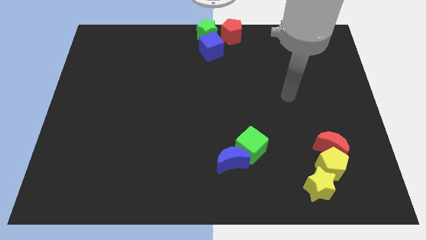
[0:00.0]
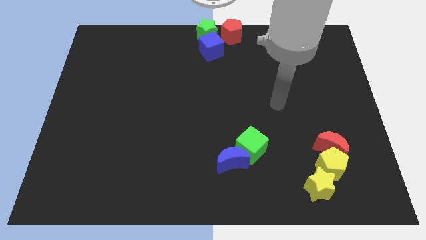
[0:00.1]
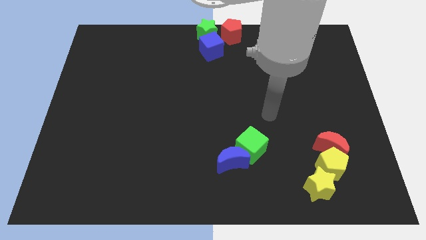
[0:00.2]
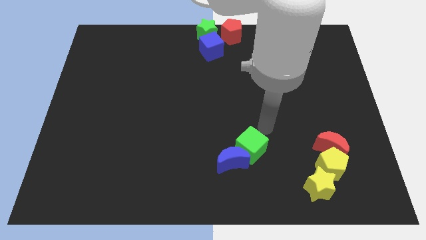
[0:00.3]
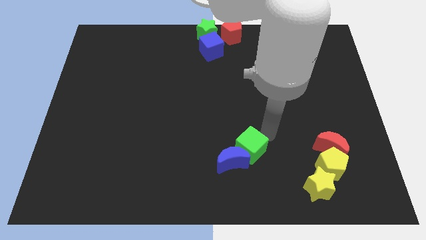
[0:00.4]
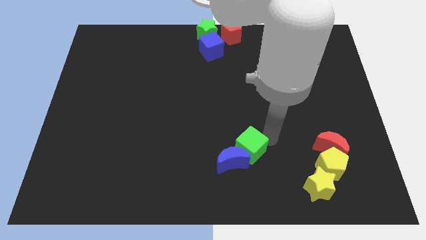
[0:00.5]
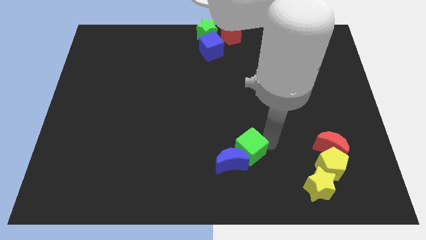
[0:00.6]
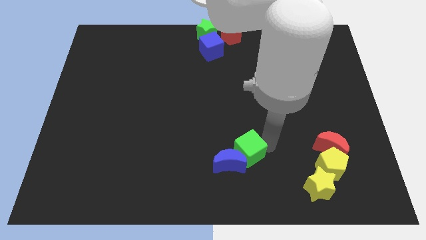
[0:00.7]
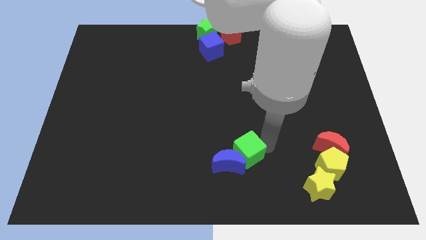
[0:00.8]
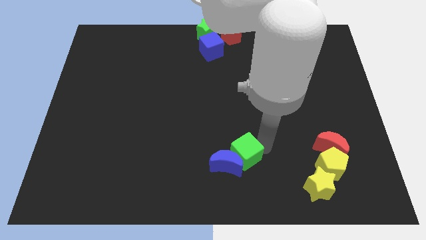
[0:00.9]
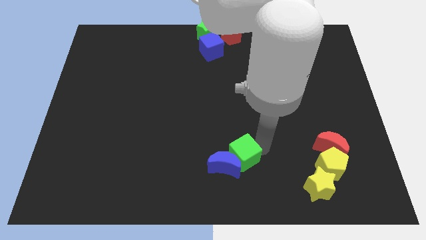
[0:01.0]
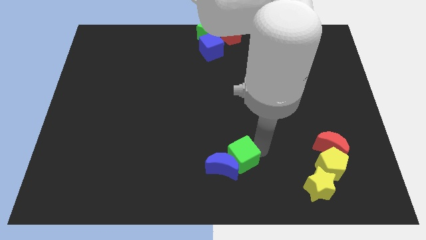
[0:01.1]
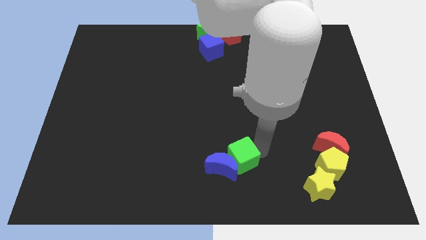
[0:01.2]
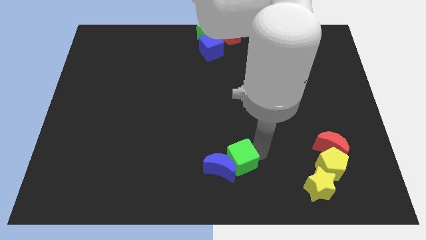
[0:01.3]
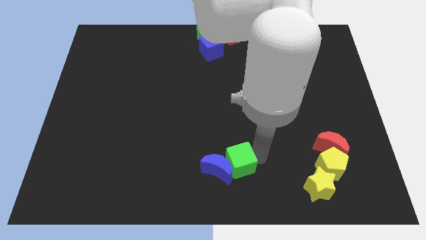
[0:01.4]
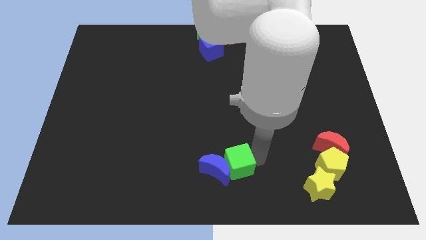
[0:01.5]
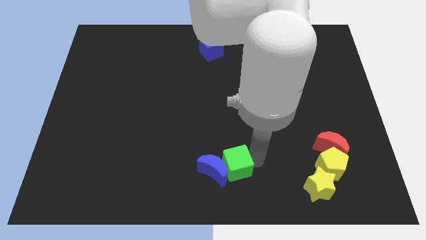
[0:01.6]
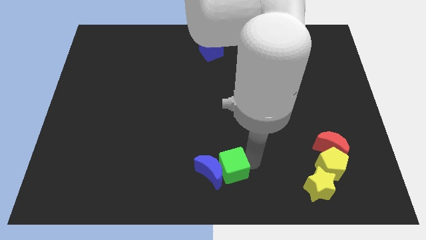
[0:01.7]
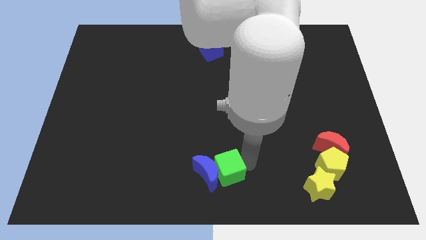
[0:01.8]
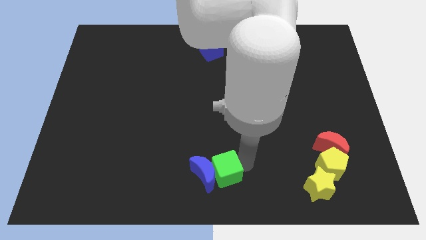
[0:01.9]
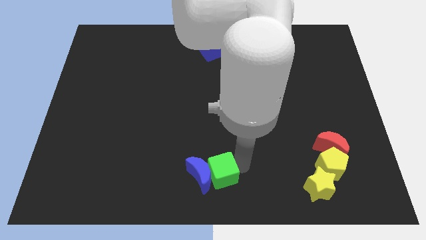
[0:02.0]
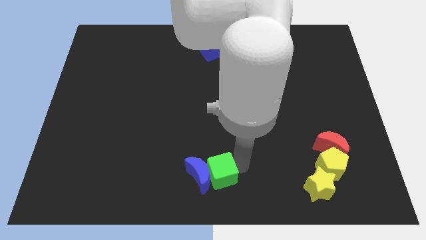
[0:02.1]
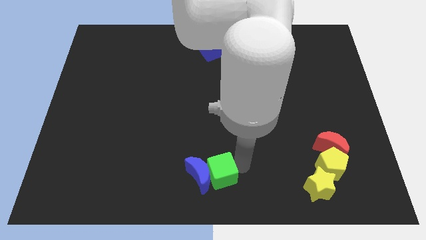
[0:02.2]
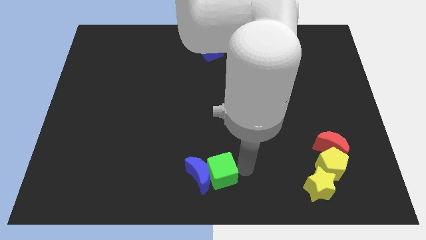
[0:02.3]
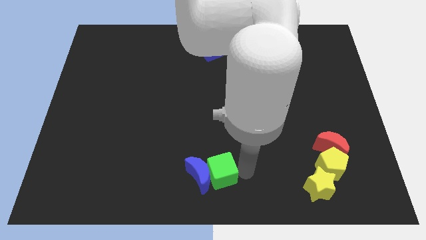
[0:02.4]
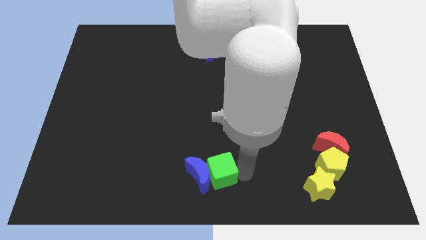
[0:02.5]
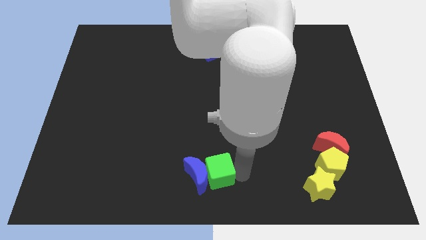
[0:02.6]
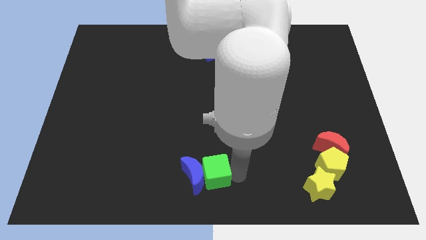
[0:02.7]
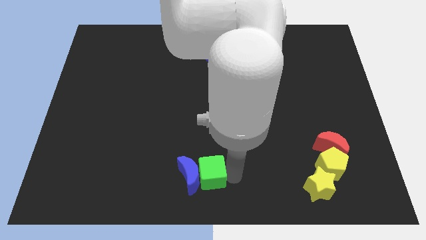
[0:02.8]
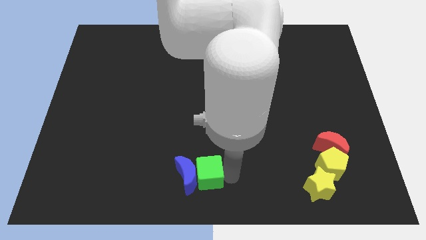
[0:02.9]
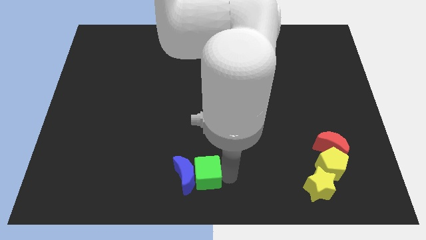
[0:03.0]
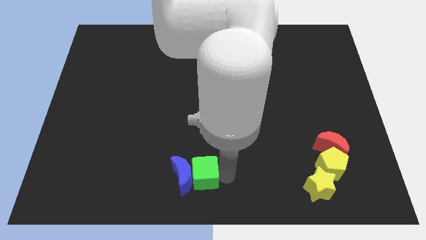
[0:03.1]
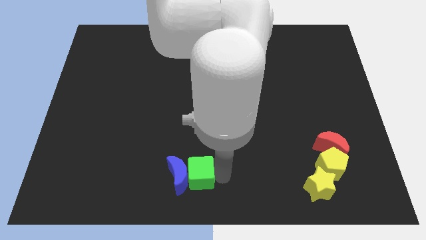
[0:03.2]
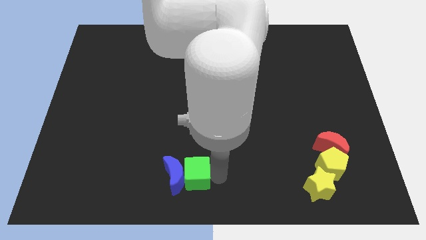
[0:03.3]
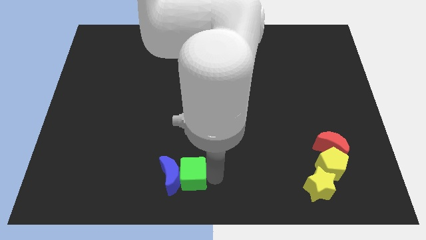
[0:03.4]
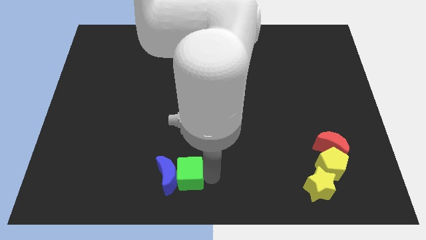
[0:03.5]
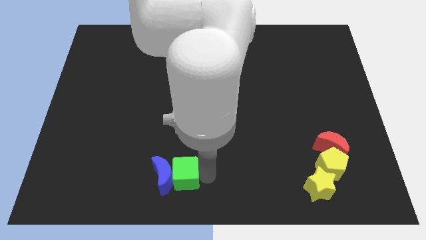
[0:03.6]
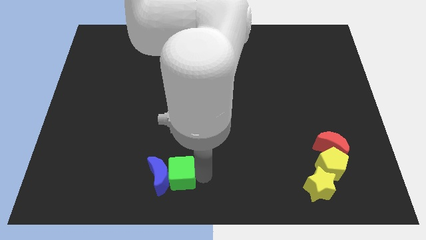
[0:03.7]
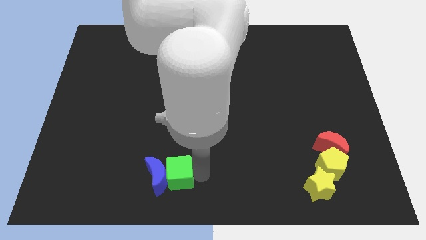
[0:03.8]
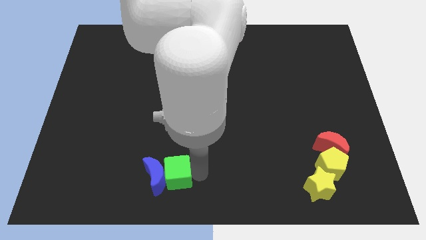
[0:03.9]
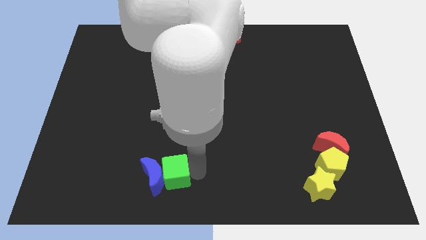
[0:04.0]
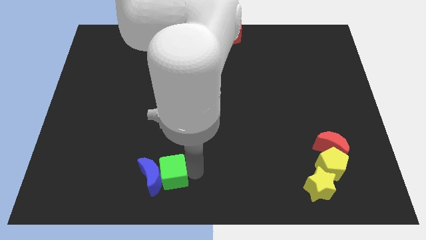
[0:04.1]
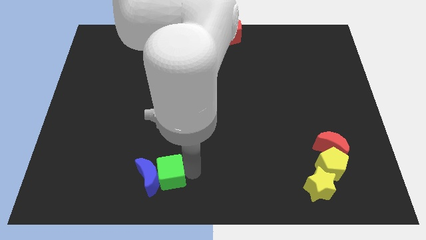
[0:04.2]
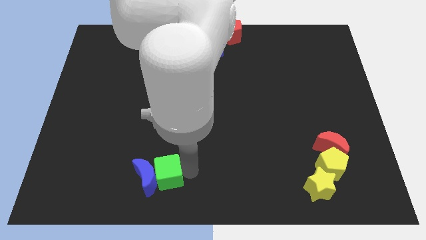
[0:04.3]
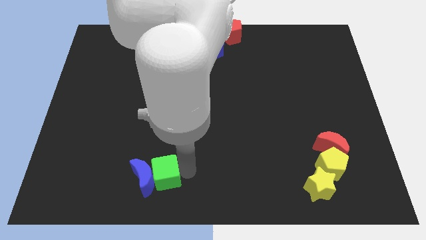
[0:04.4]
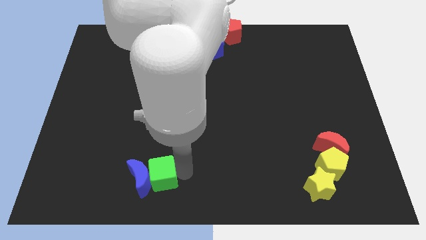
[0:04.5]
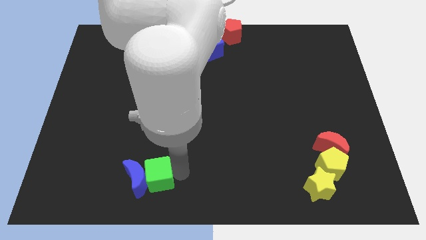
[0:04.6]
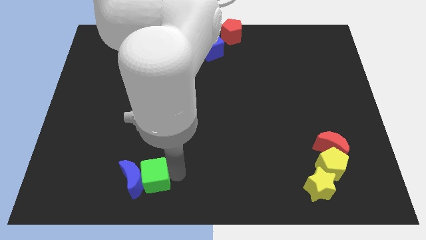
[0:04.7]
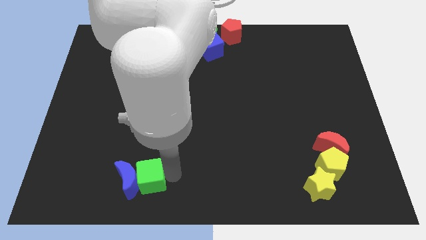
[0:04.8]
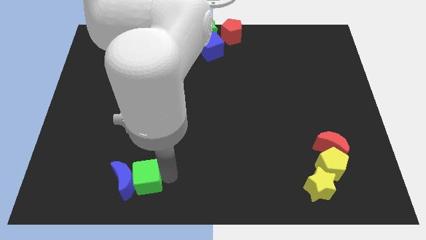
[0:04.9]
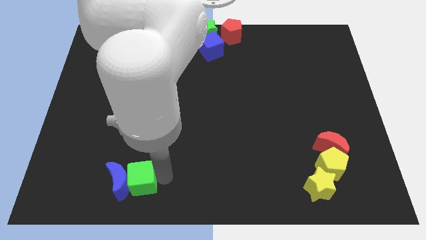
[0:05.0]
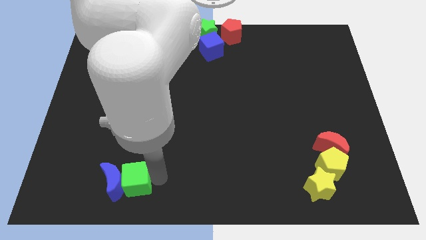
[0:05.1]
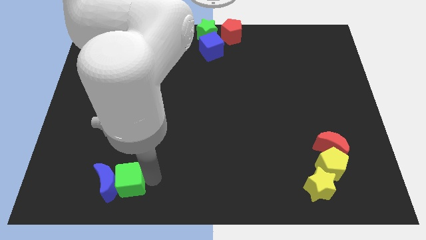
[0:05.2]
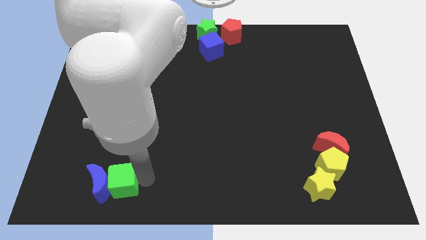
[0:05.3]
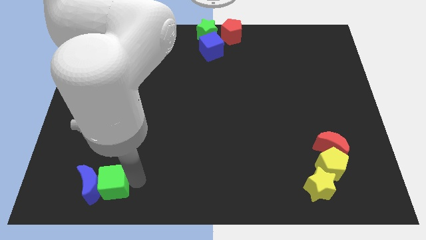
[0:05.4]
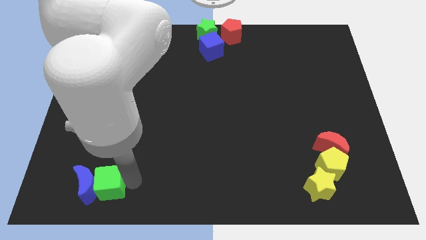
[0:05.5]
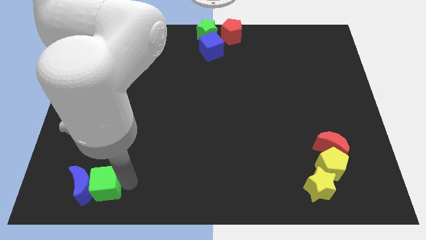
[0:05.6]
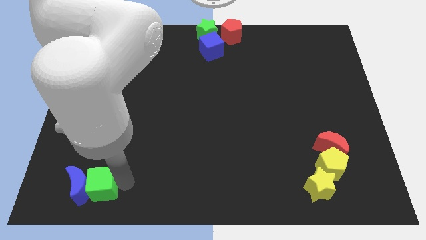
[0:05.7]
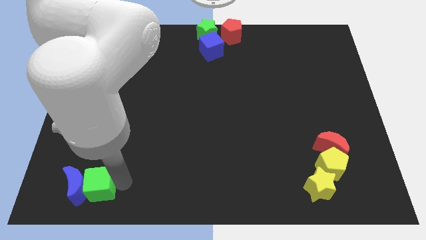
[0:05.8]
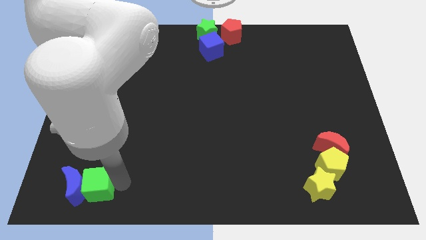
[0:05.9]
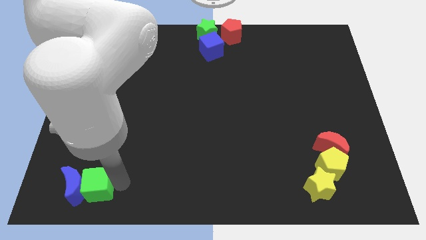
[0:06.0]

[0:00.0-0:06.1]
push the blue moon and green cube to the bottom left corner

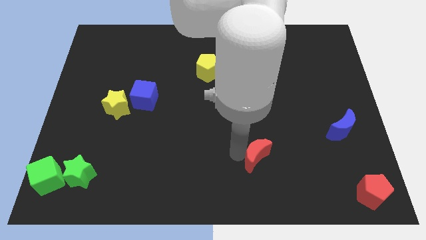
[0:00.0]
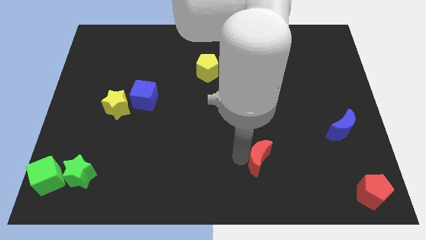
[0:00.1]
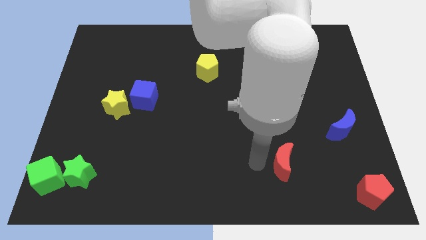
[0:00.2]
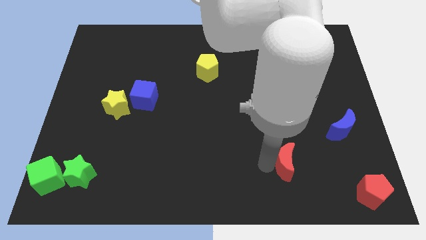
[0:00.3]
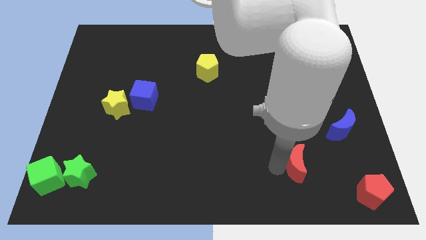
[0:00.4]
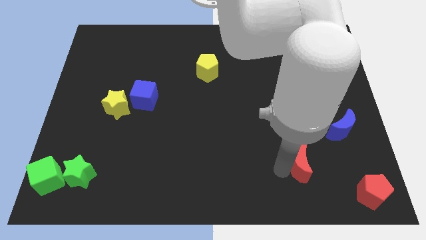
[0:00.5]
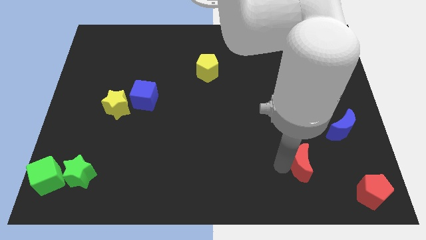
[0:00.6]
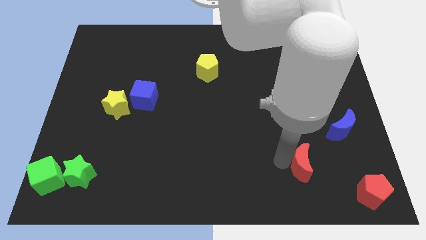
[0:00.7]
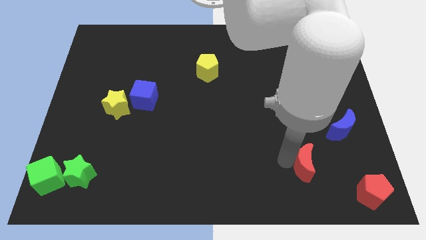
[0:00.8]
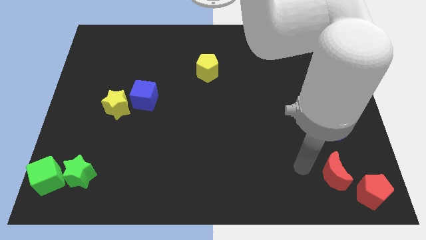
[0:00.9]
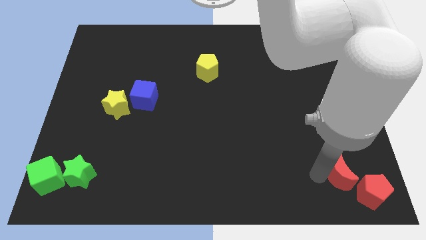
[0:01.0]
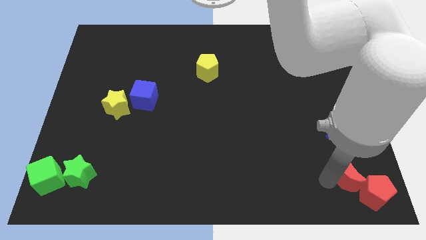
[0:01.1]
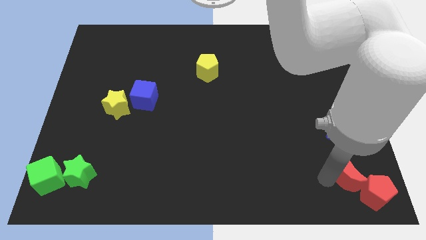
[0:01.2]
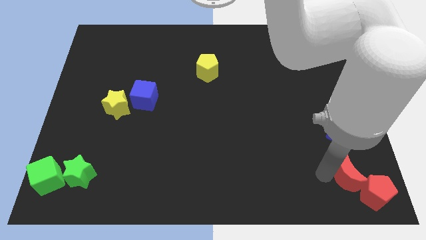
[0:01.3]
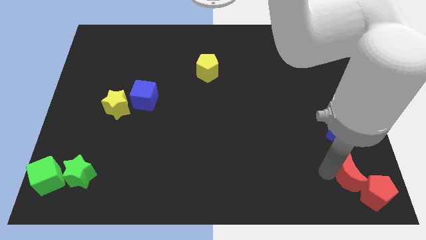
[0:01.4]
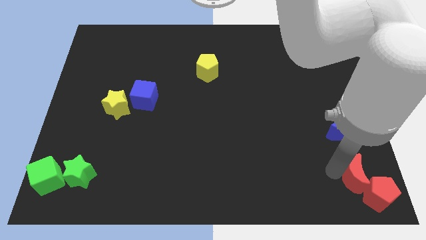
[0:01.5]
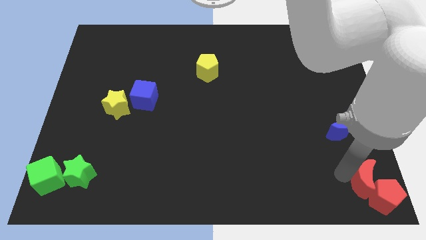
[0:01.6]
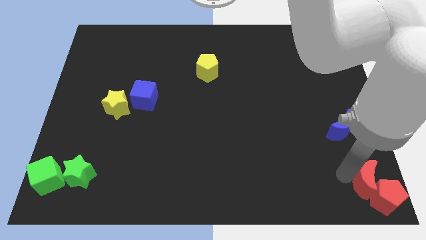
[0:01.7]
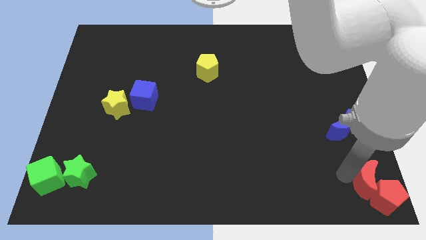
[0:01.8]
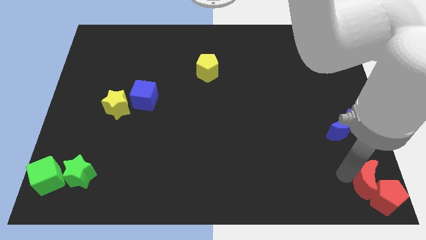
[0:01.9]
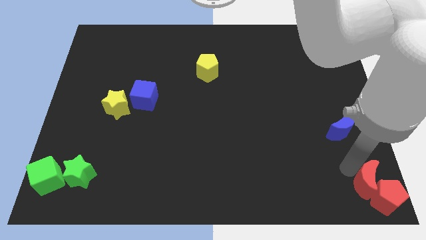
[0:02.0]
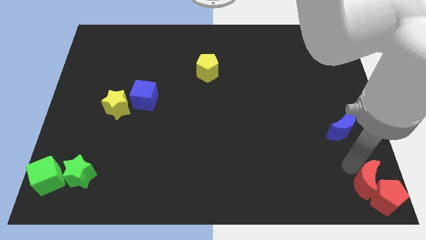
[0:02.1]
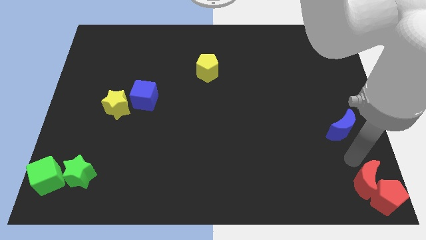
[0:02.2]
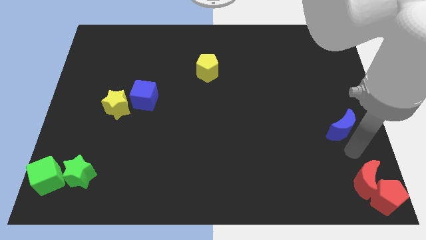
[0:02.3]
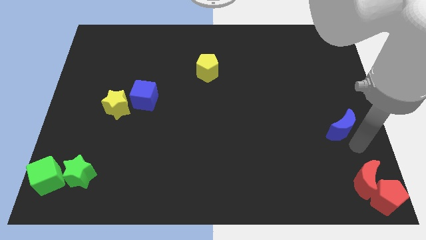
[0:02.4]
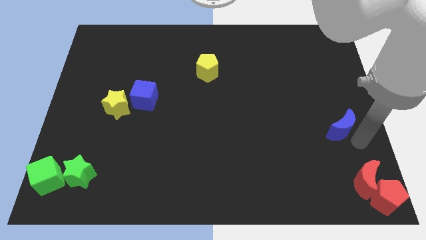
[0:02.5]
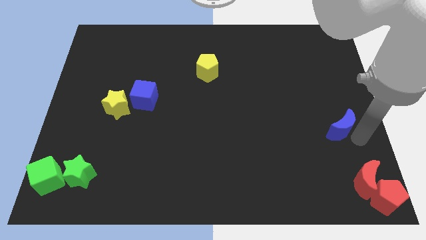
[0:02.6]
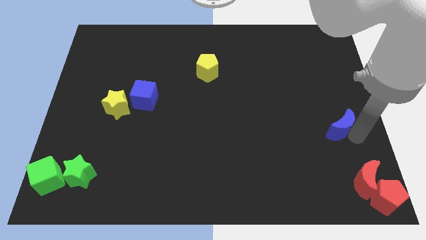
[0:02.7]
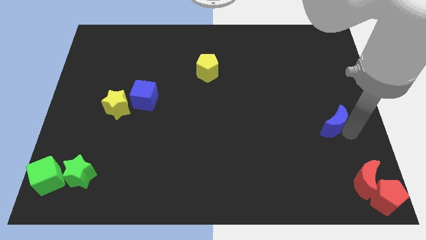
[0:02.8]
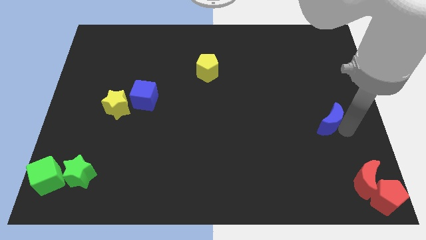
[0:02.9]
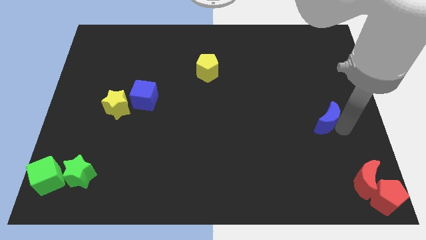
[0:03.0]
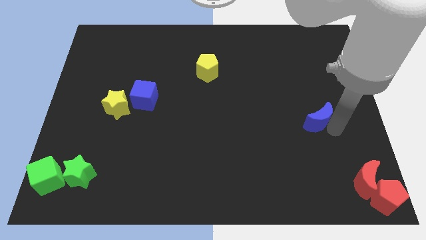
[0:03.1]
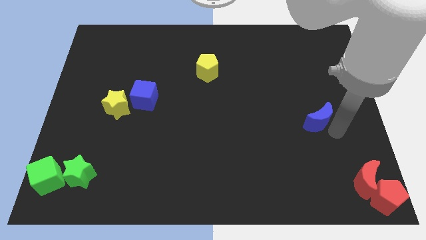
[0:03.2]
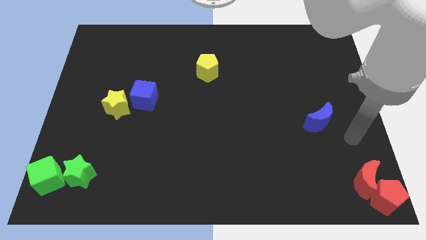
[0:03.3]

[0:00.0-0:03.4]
place the red crescent towards the left side of the red pentagon
